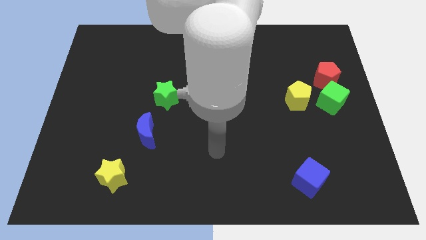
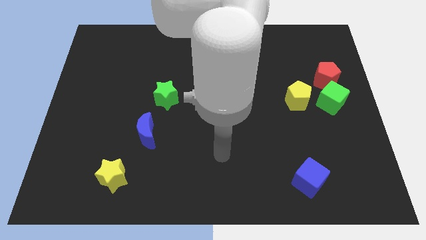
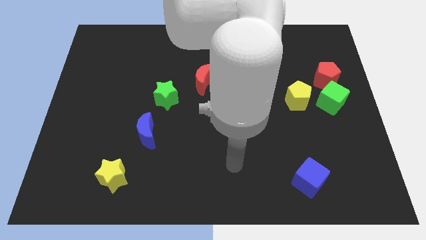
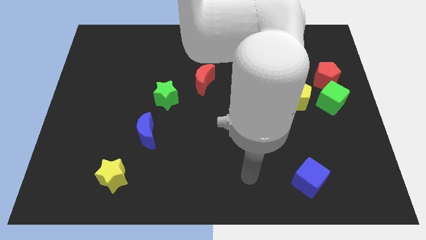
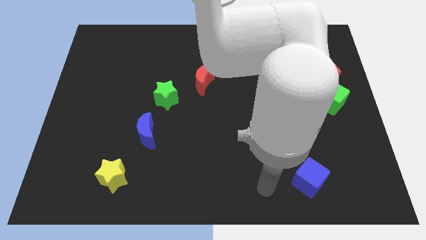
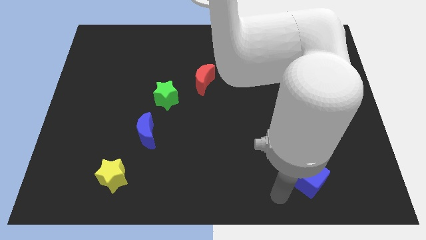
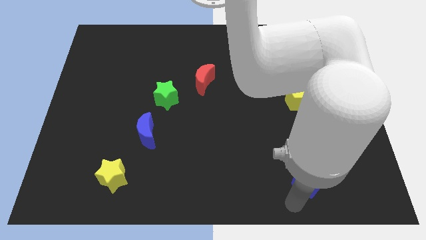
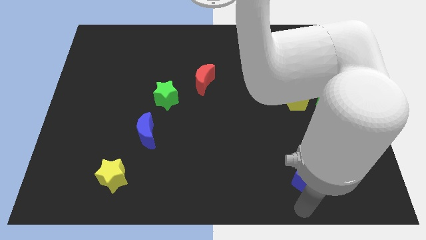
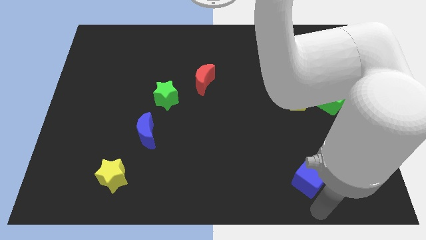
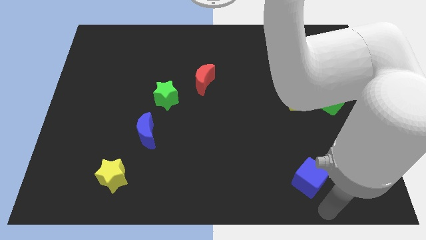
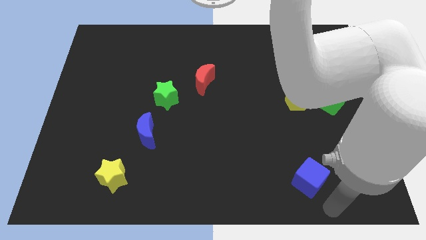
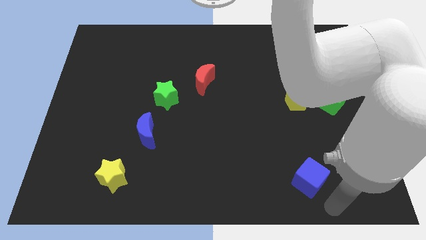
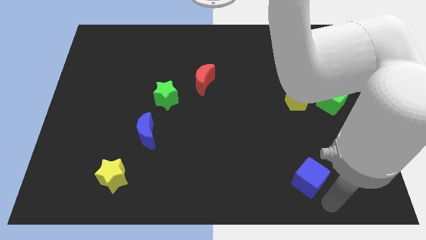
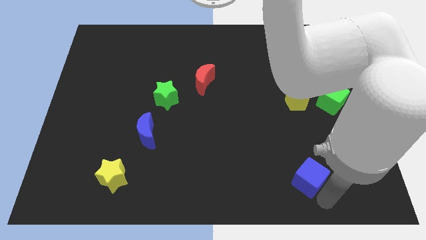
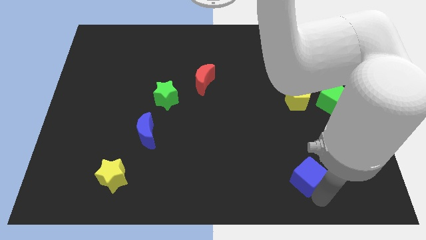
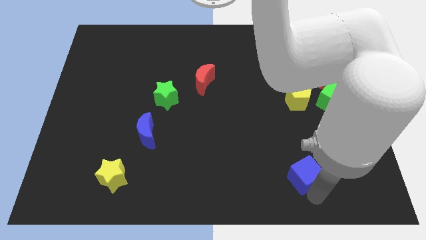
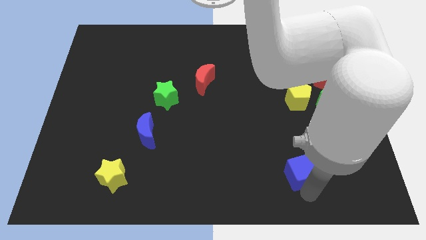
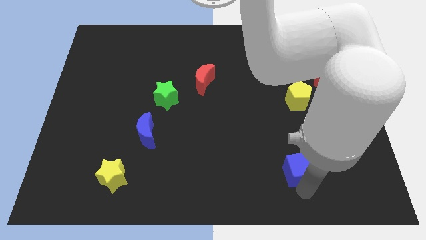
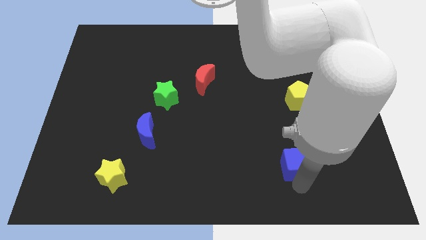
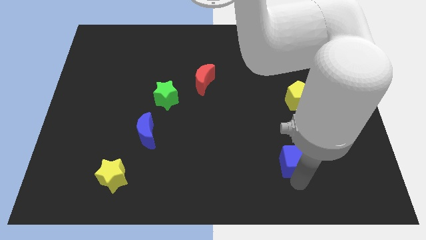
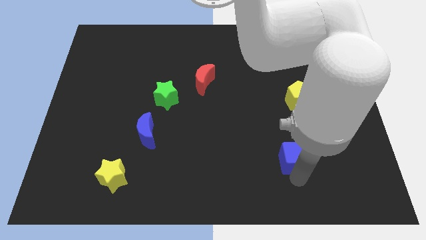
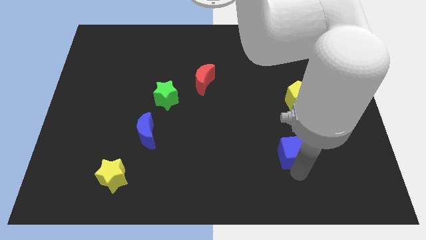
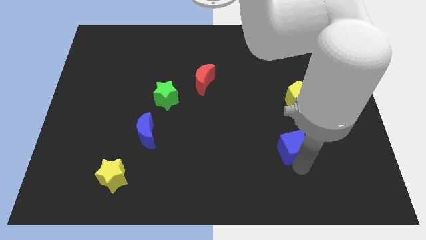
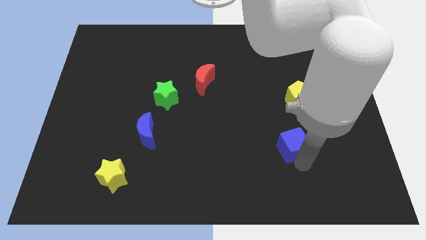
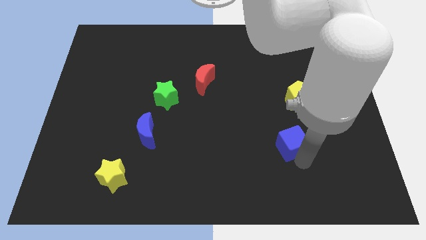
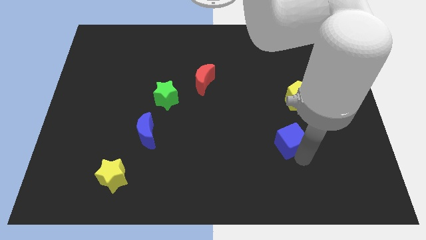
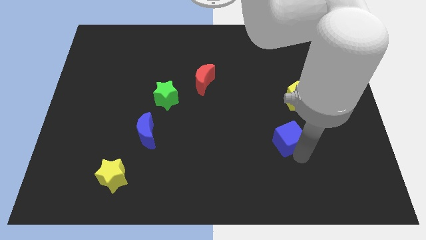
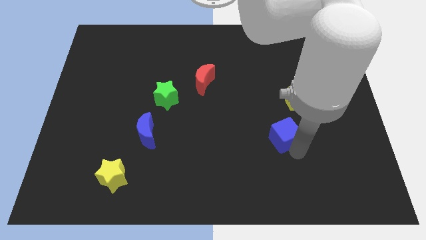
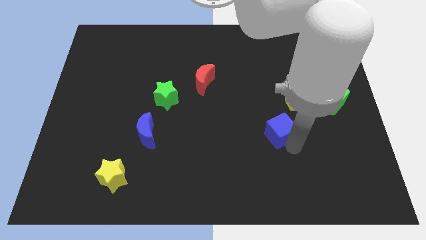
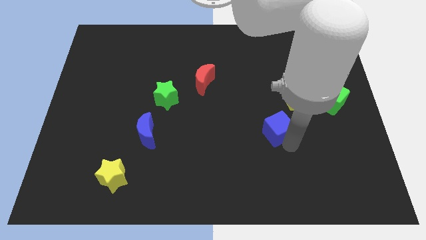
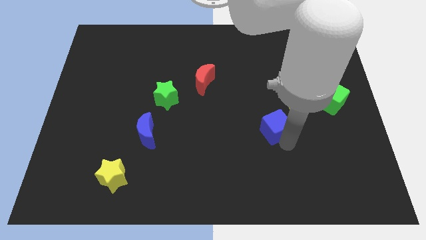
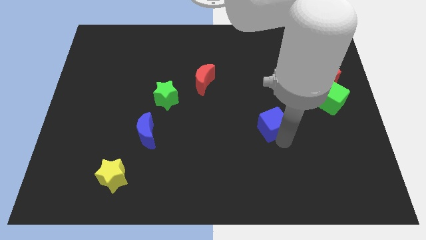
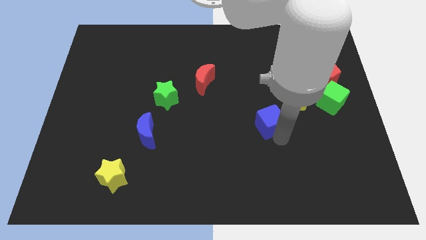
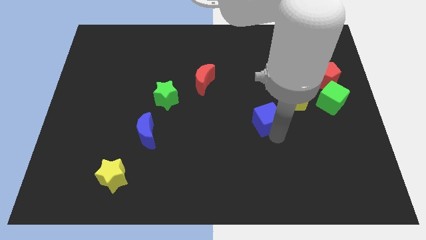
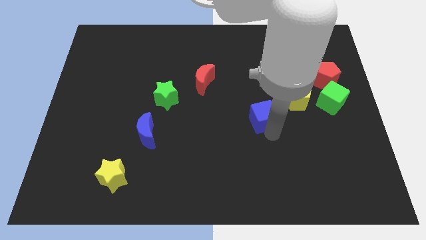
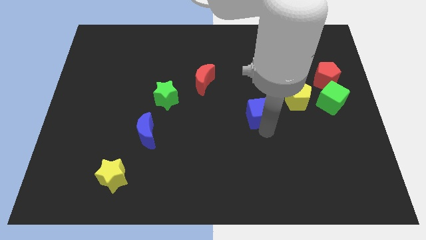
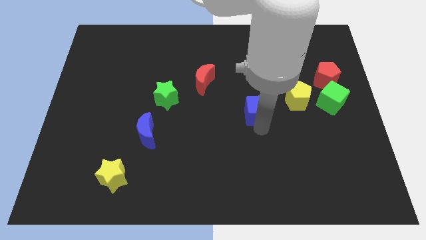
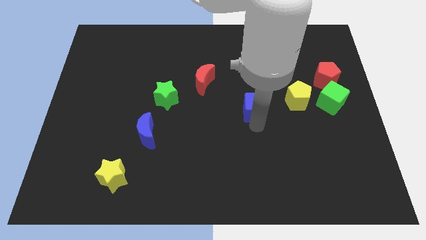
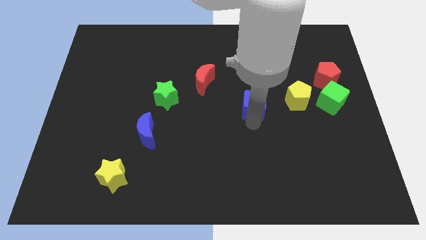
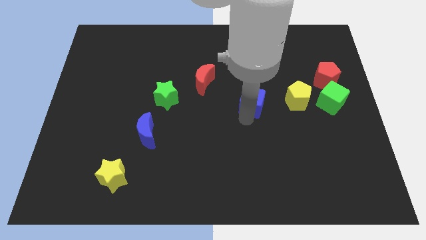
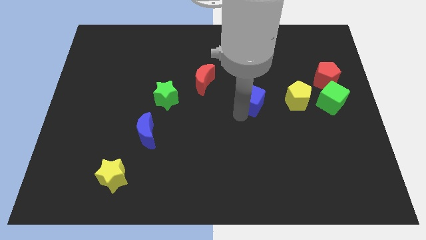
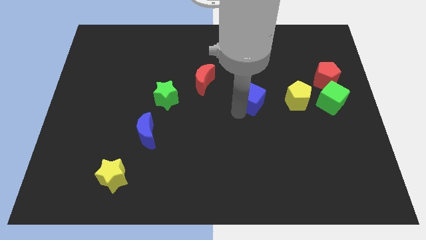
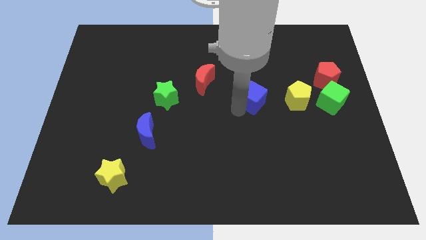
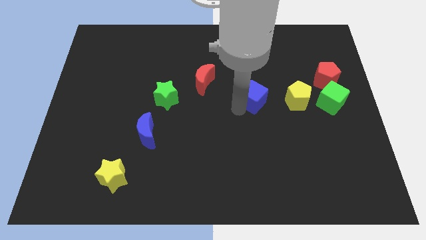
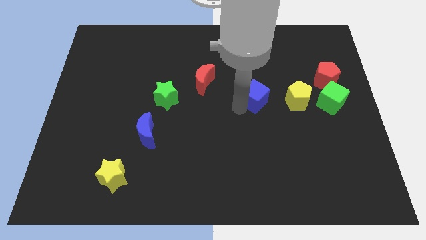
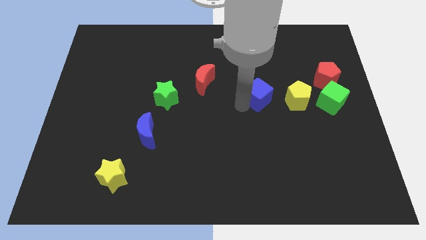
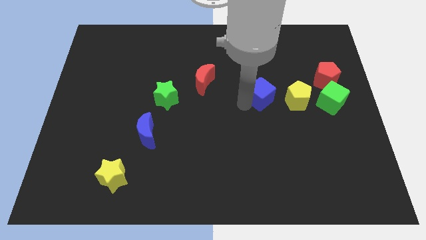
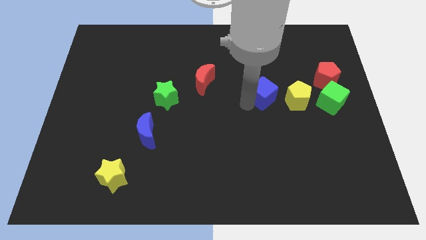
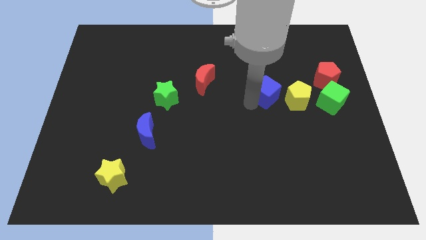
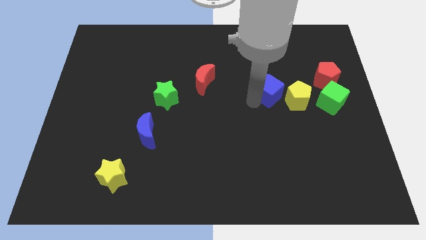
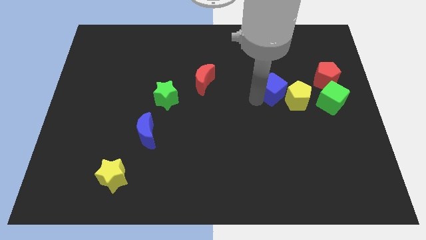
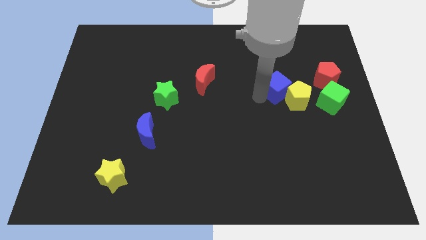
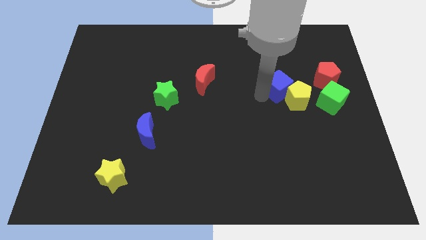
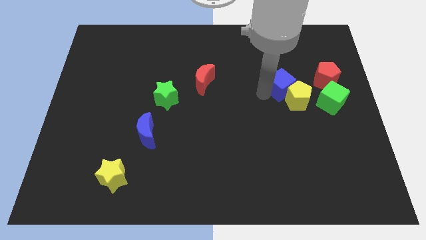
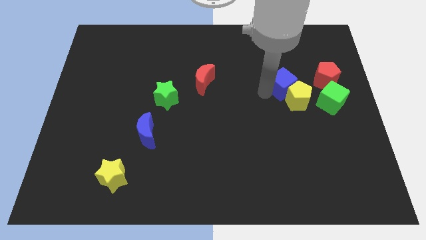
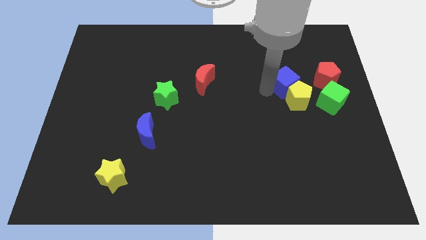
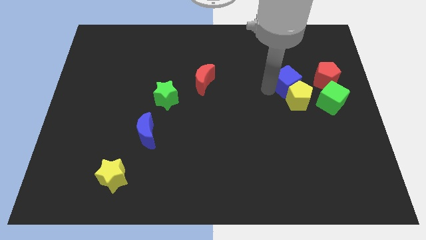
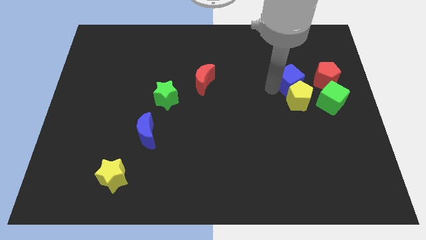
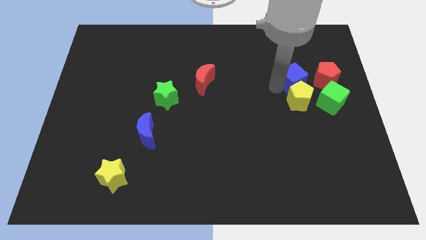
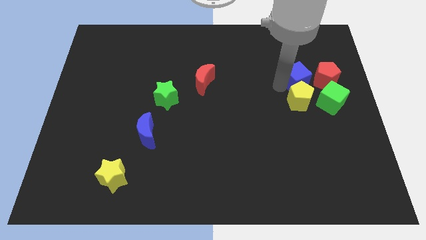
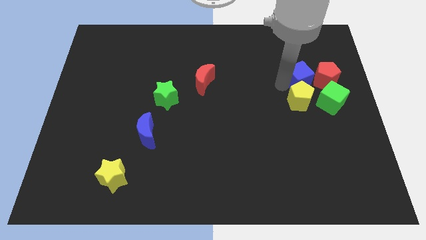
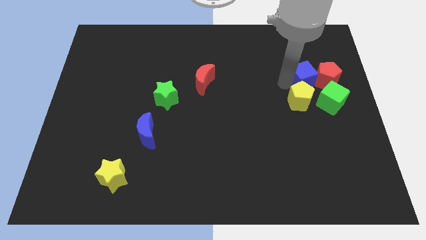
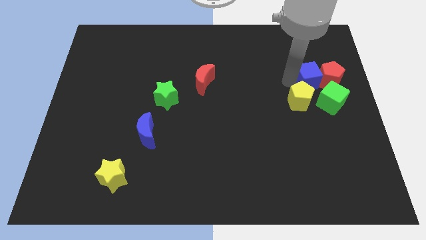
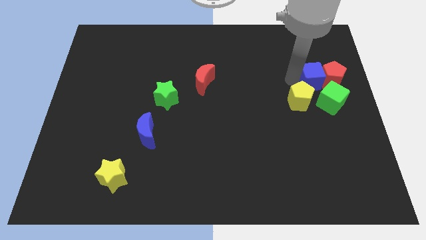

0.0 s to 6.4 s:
push the blue cube towards the red pentagon

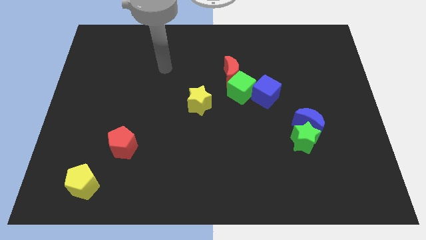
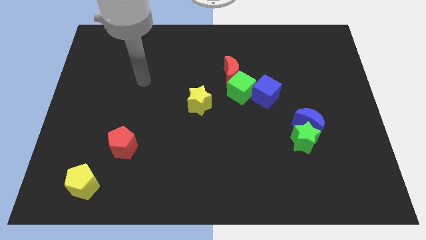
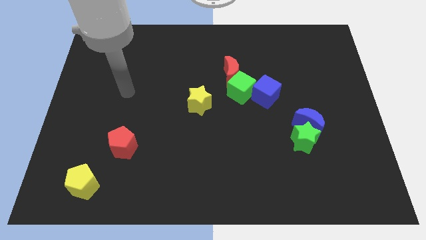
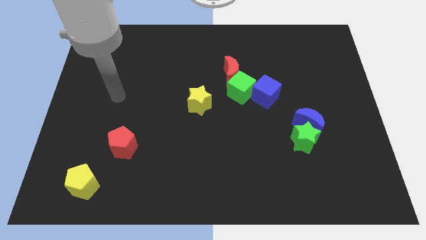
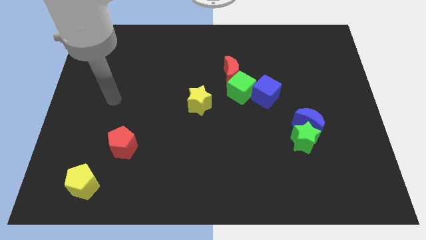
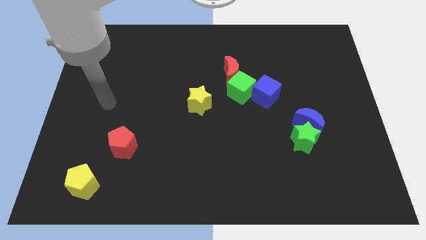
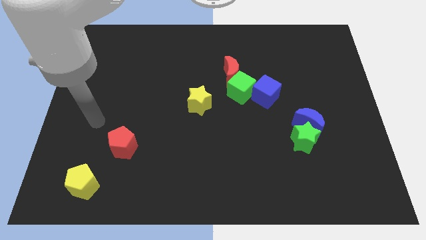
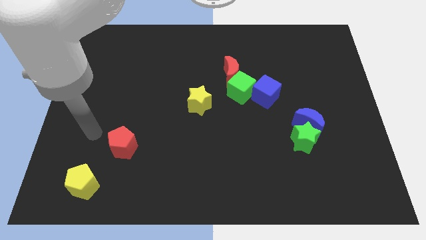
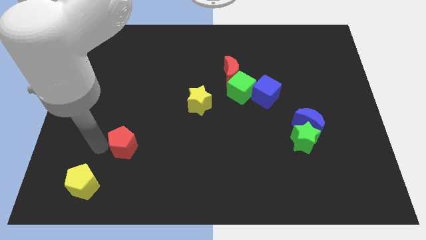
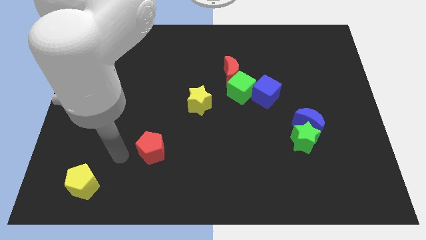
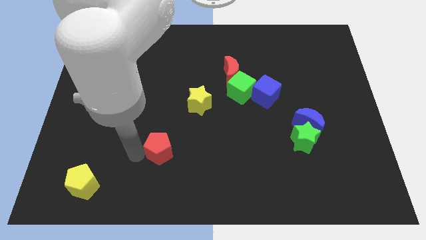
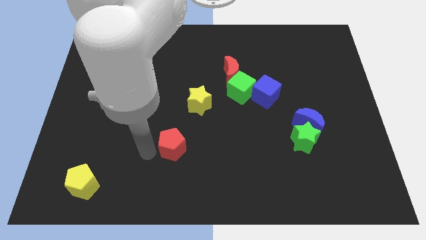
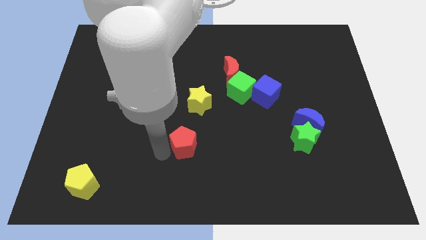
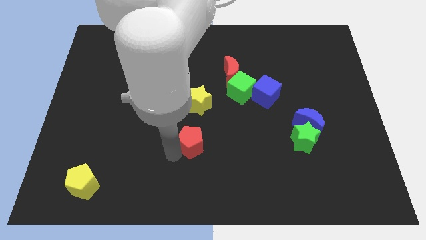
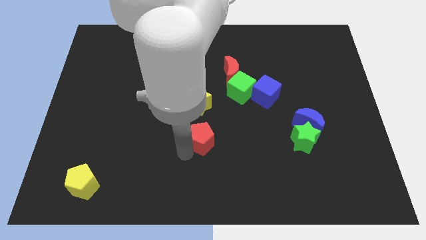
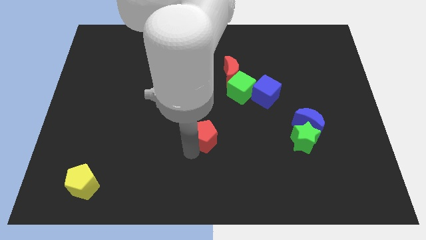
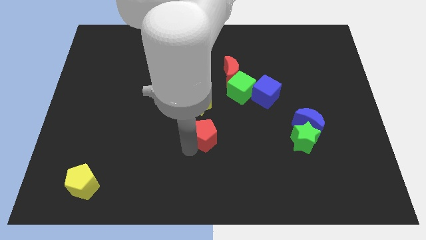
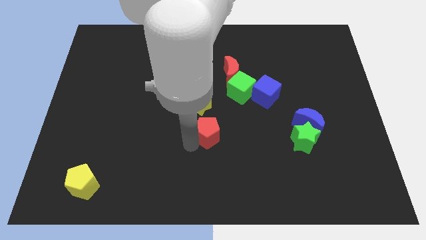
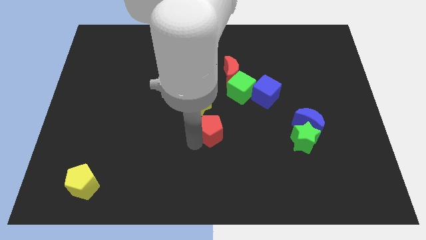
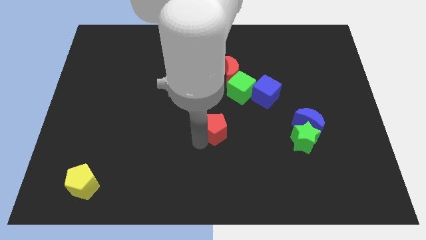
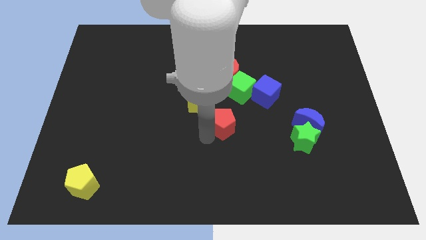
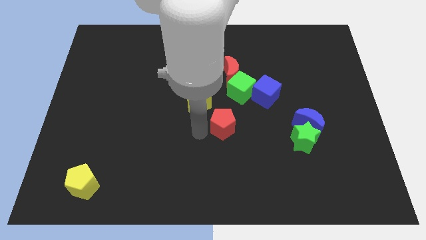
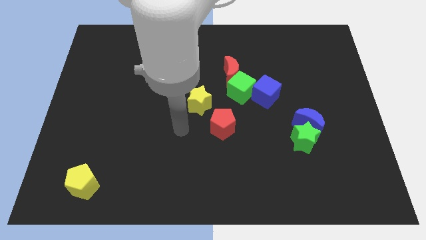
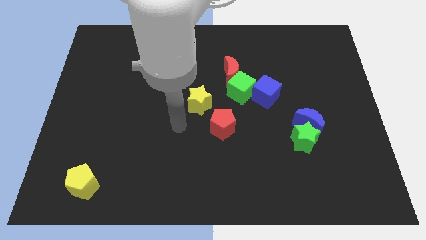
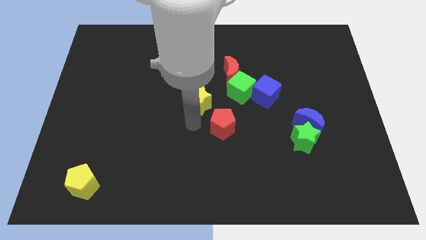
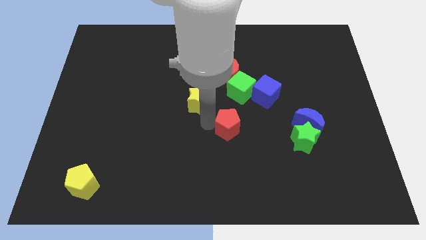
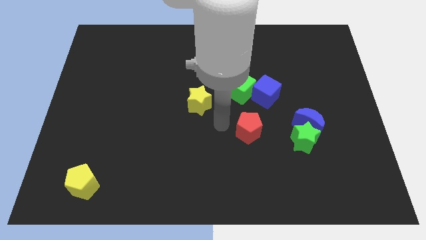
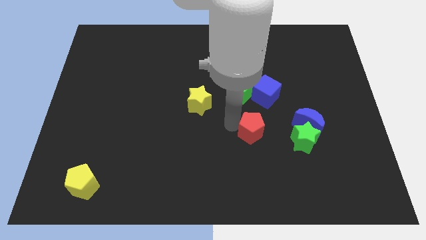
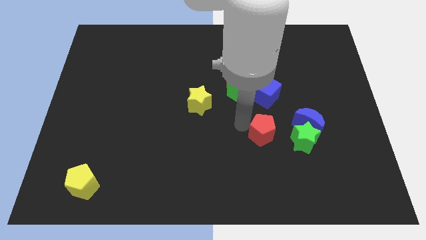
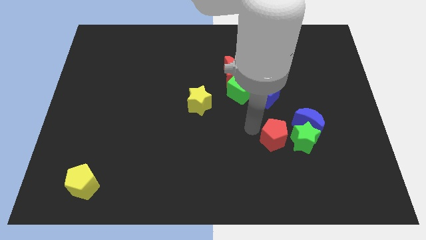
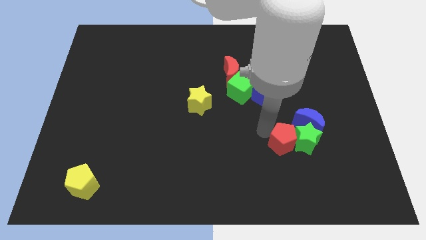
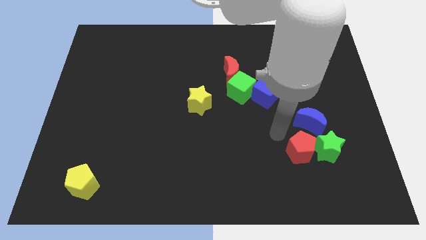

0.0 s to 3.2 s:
put the red pentagon to the green star
